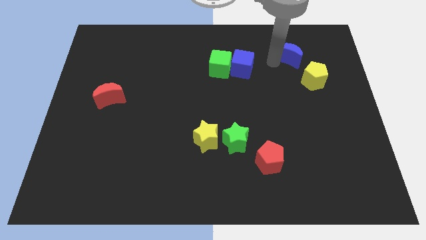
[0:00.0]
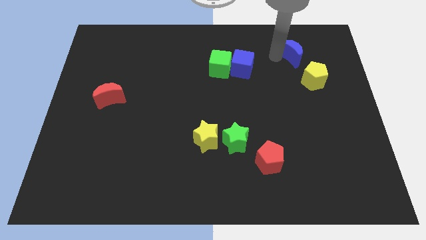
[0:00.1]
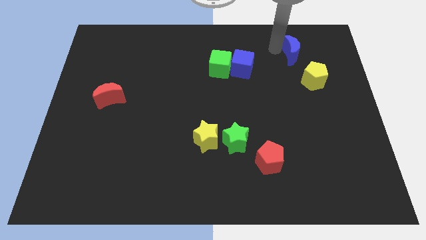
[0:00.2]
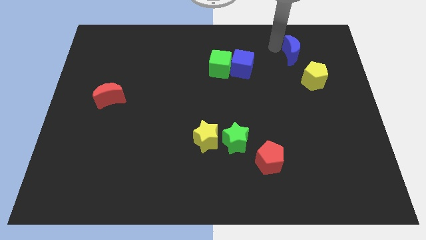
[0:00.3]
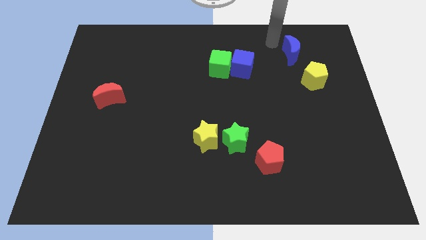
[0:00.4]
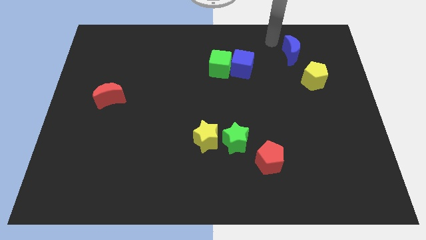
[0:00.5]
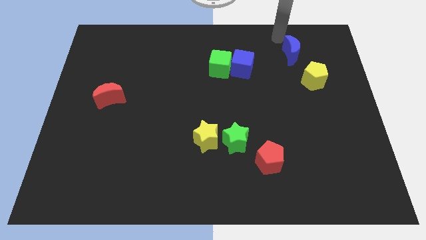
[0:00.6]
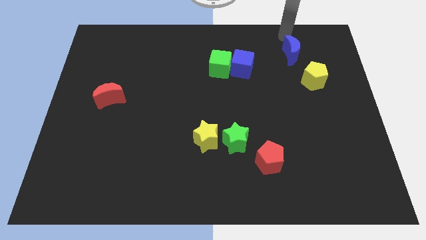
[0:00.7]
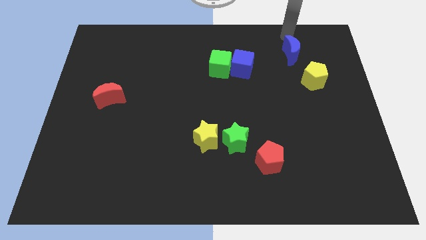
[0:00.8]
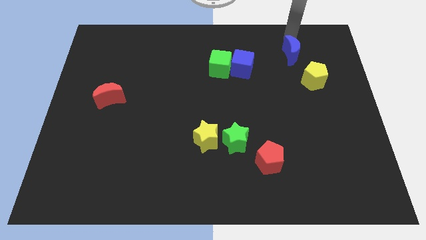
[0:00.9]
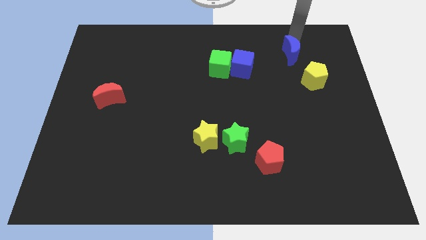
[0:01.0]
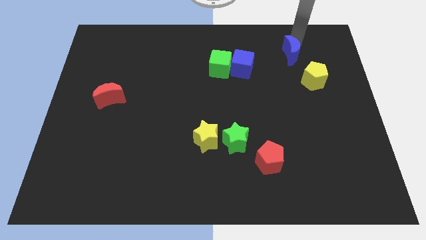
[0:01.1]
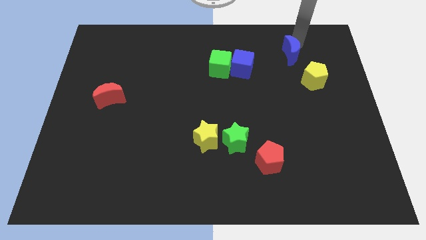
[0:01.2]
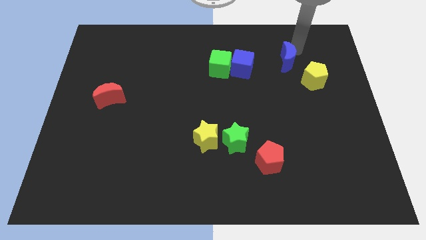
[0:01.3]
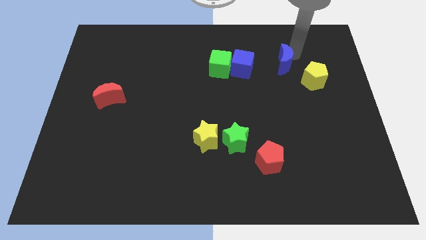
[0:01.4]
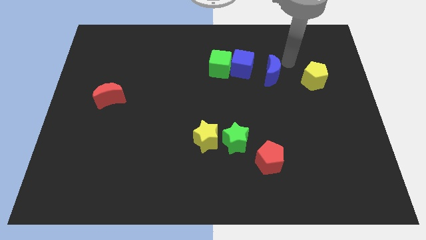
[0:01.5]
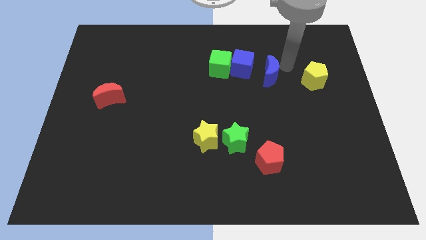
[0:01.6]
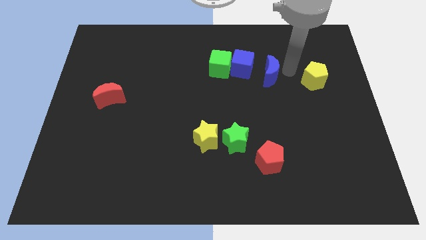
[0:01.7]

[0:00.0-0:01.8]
put the blue crescent to the left of the yellow pentagon

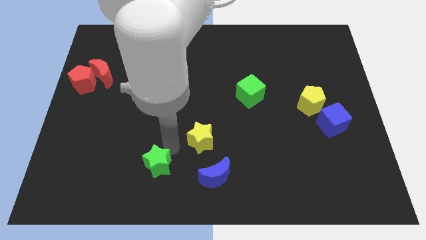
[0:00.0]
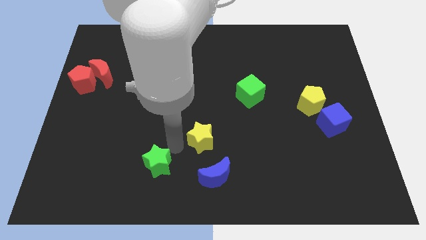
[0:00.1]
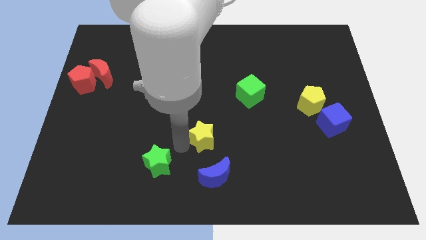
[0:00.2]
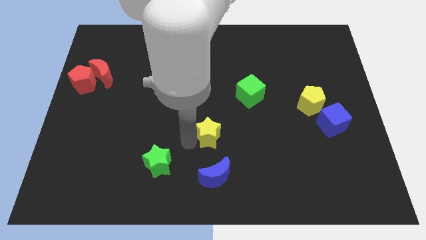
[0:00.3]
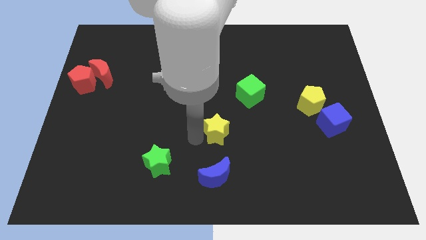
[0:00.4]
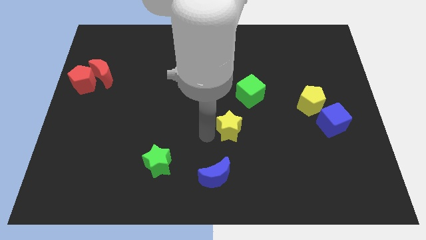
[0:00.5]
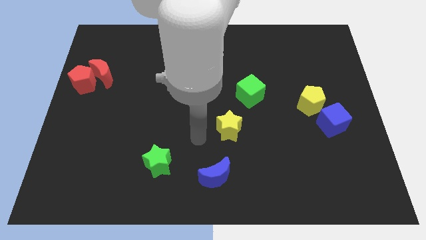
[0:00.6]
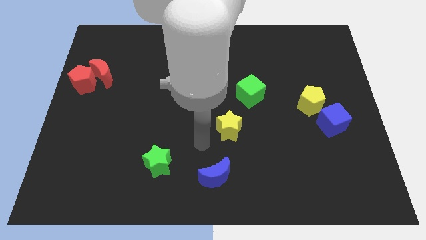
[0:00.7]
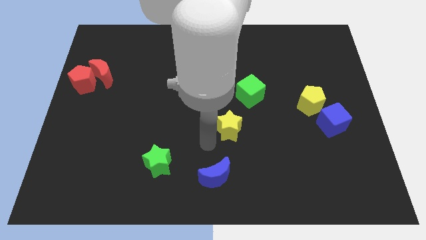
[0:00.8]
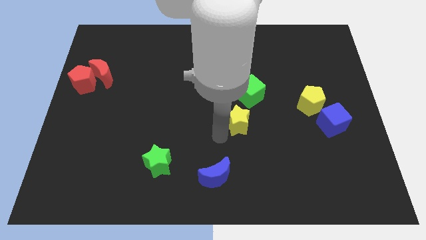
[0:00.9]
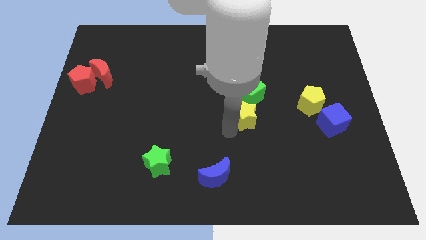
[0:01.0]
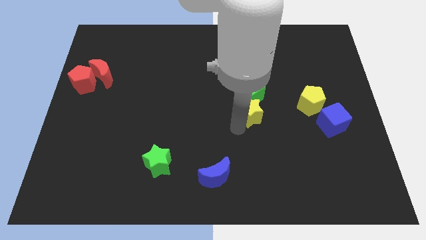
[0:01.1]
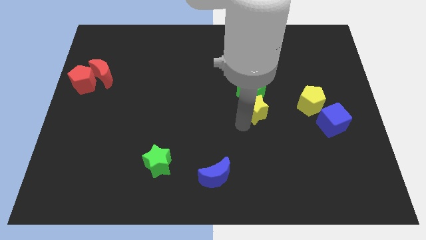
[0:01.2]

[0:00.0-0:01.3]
place the yellow star below the green cube

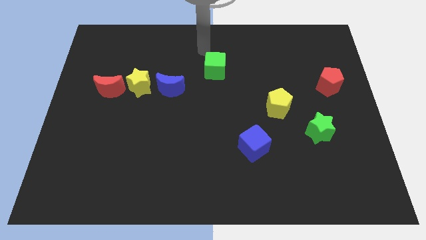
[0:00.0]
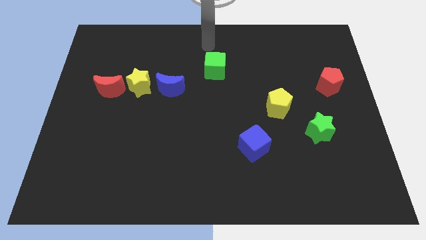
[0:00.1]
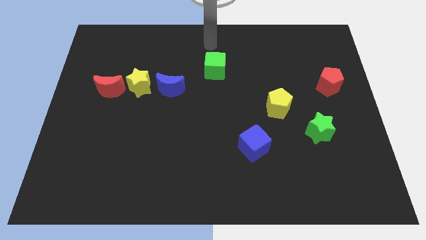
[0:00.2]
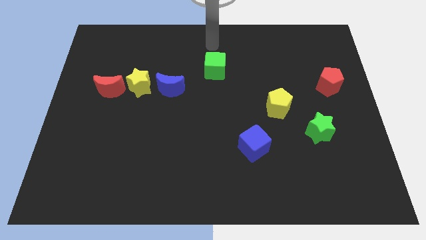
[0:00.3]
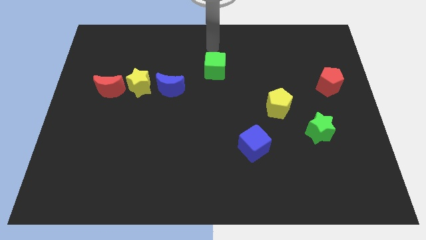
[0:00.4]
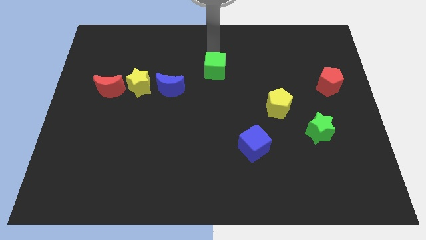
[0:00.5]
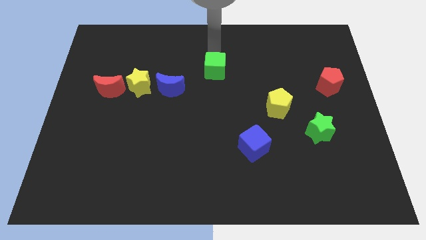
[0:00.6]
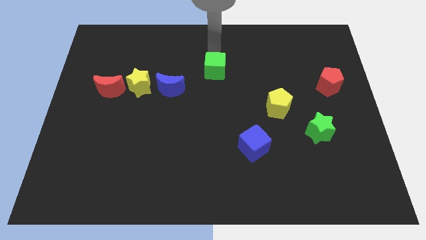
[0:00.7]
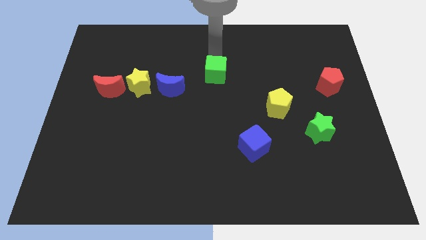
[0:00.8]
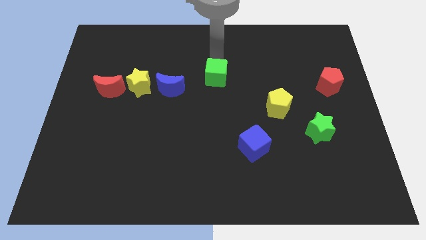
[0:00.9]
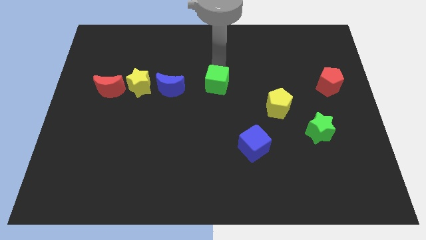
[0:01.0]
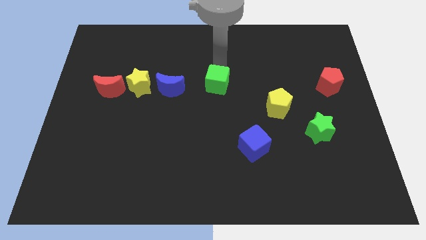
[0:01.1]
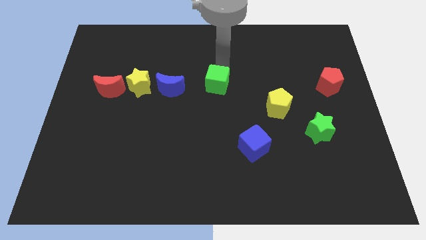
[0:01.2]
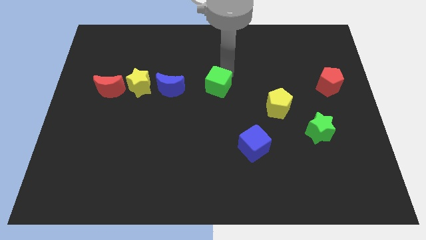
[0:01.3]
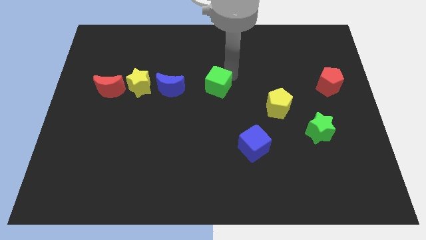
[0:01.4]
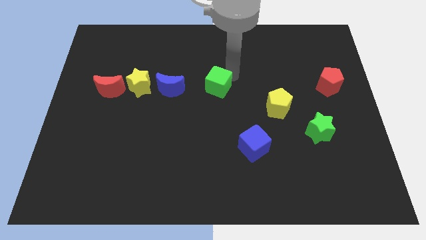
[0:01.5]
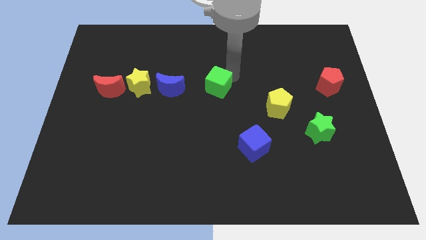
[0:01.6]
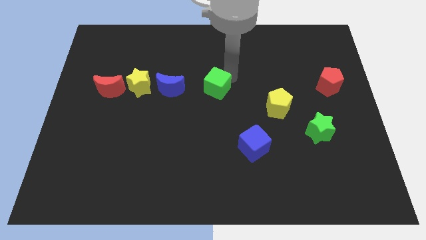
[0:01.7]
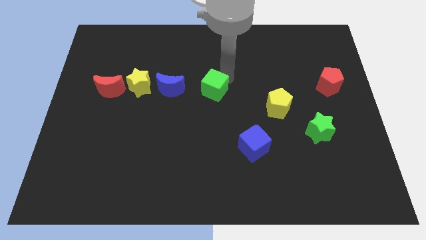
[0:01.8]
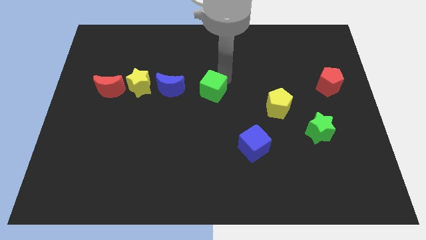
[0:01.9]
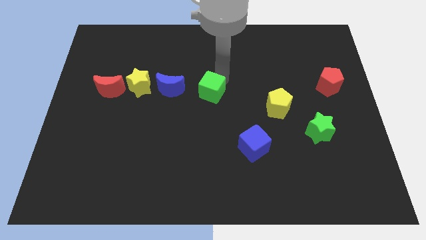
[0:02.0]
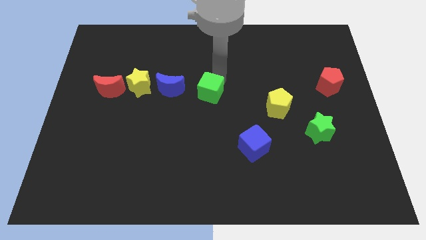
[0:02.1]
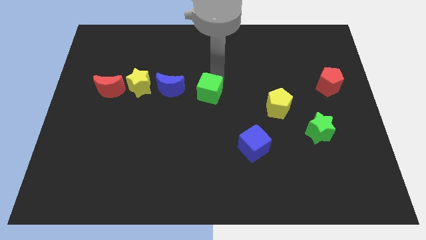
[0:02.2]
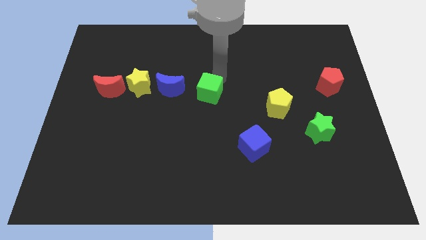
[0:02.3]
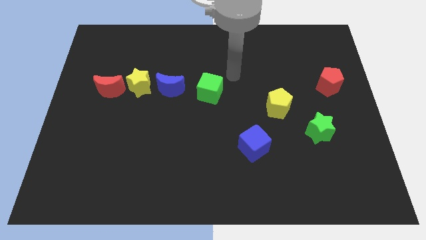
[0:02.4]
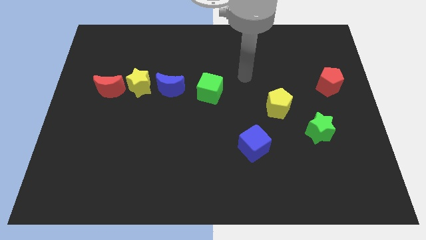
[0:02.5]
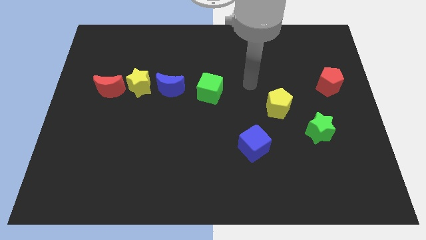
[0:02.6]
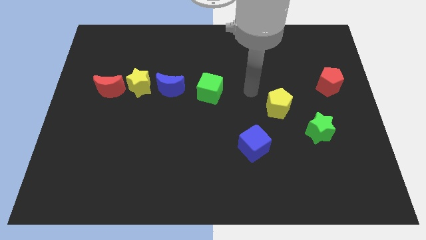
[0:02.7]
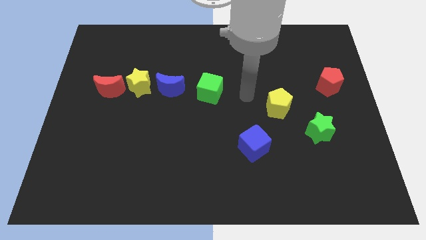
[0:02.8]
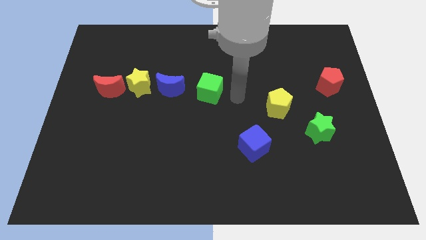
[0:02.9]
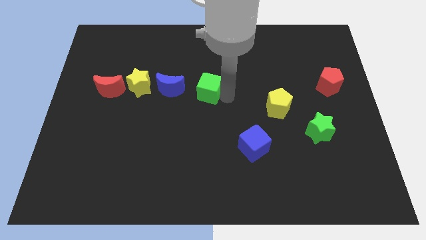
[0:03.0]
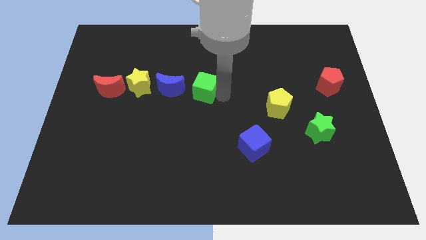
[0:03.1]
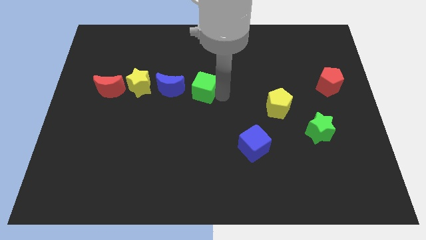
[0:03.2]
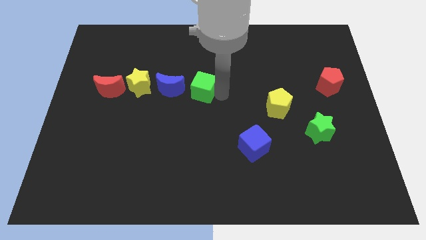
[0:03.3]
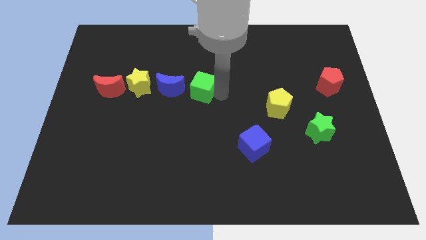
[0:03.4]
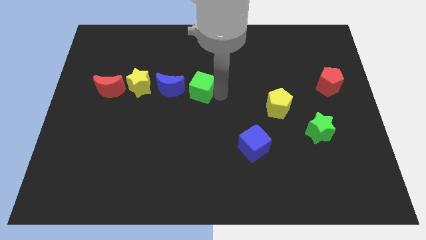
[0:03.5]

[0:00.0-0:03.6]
move green cube towards blue moon

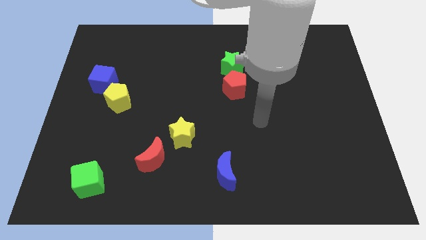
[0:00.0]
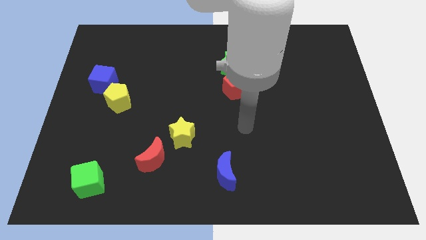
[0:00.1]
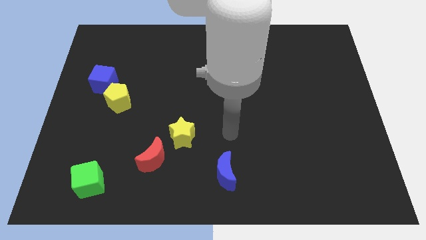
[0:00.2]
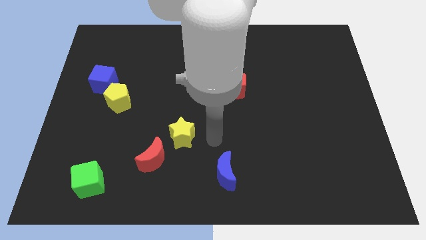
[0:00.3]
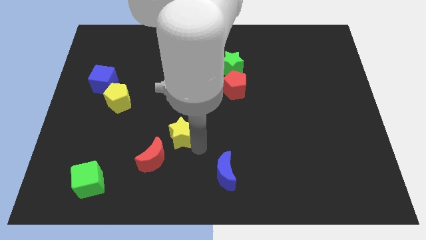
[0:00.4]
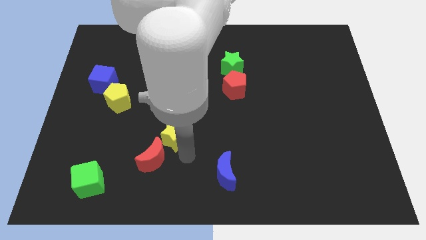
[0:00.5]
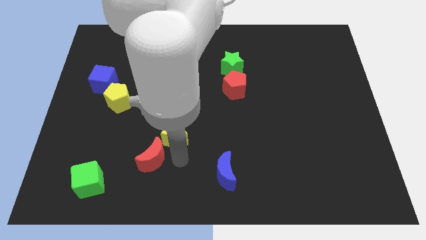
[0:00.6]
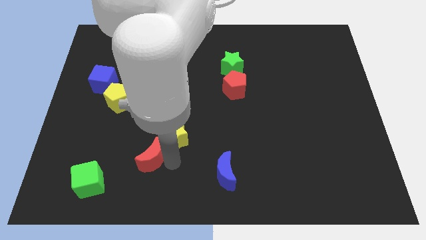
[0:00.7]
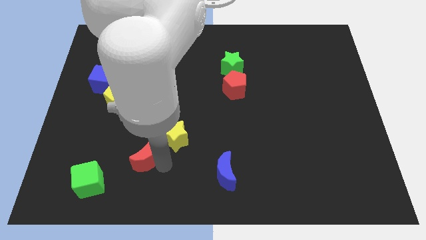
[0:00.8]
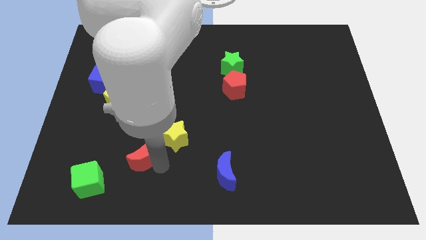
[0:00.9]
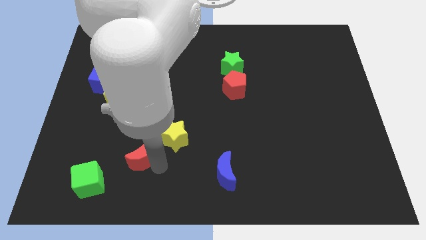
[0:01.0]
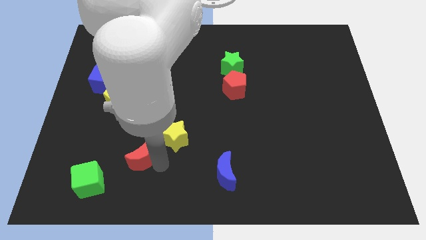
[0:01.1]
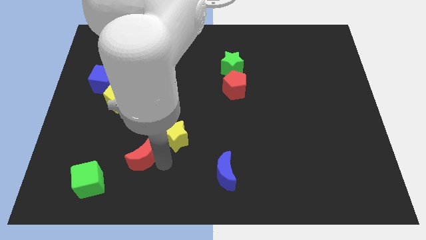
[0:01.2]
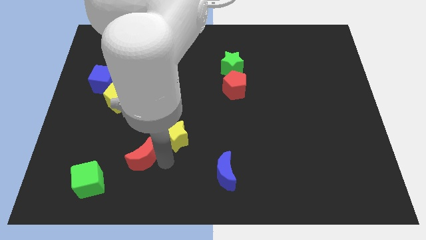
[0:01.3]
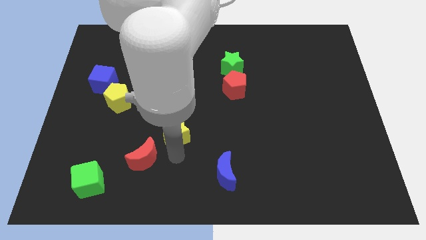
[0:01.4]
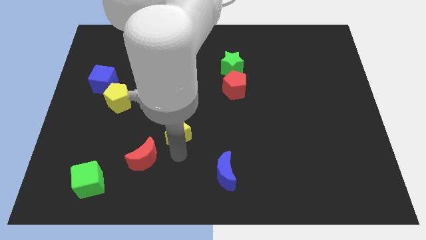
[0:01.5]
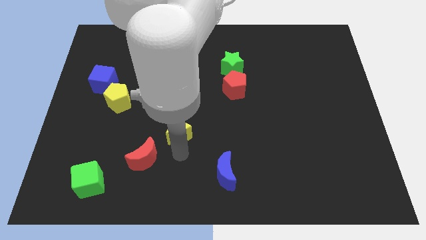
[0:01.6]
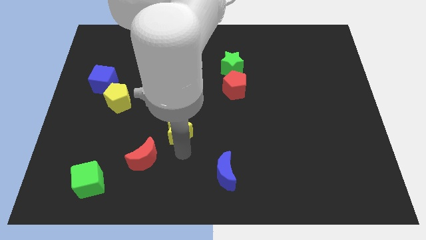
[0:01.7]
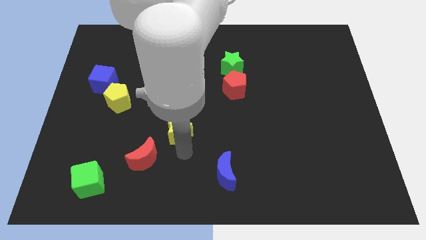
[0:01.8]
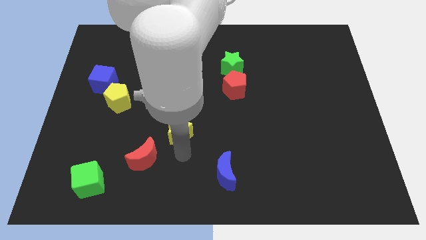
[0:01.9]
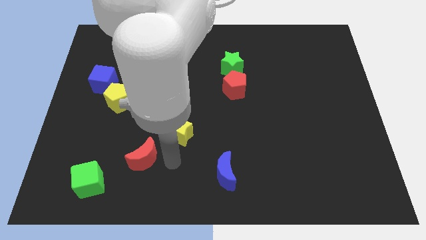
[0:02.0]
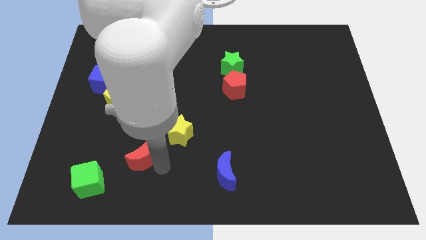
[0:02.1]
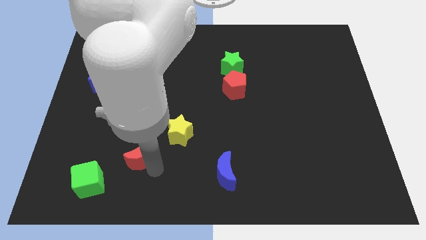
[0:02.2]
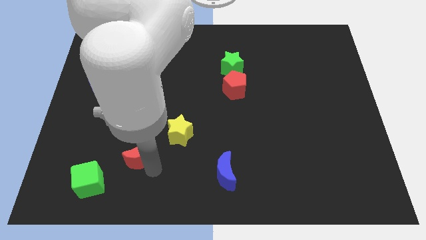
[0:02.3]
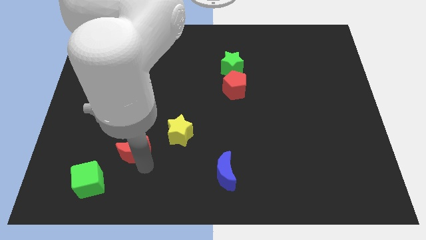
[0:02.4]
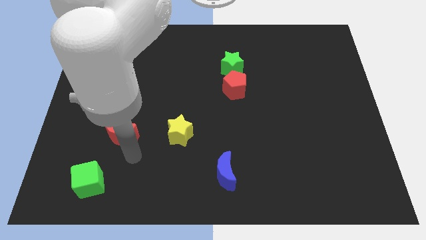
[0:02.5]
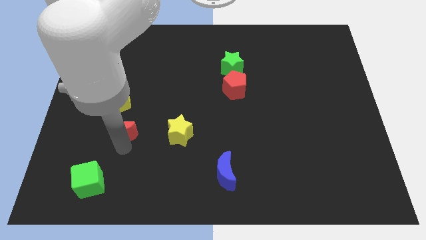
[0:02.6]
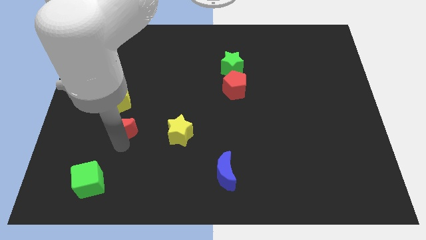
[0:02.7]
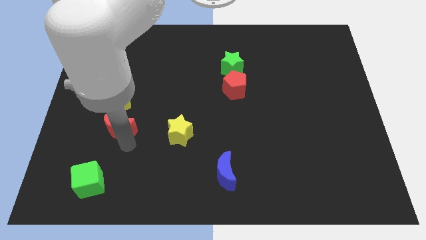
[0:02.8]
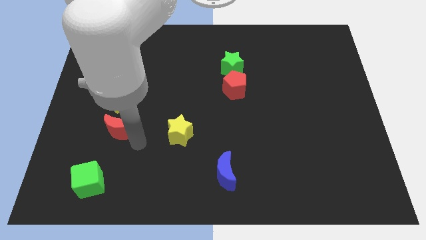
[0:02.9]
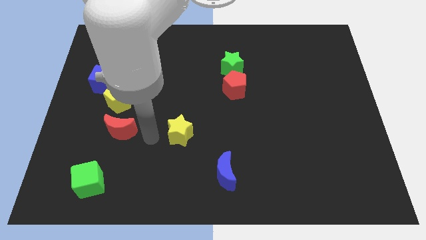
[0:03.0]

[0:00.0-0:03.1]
place the red moon in between the yellow pentagon and green cube
